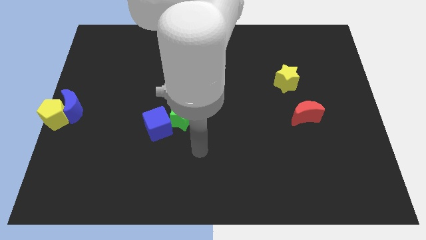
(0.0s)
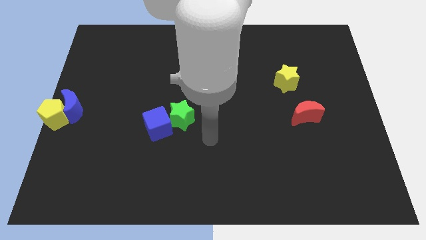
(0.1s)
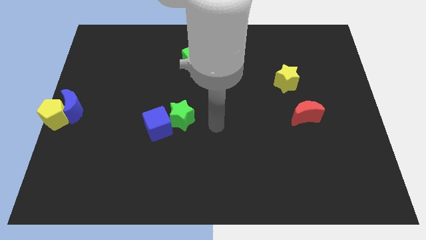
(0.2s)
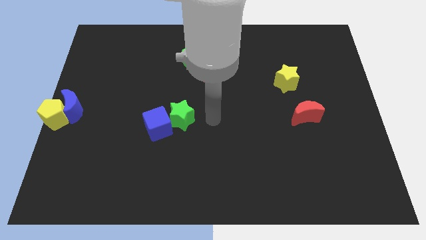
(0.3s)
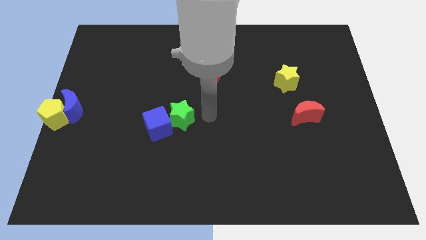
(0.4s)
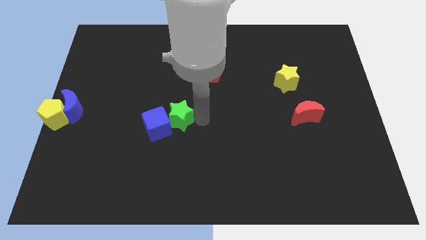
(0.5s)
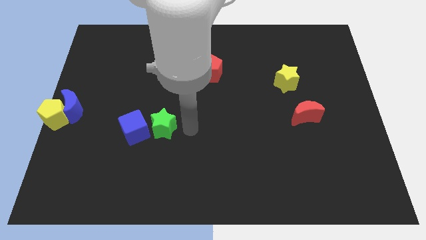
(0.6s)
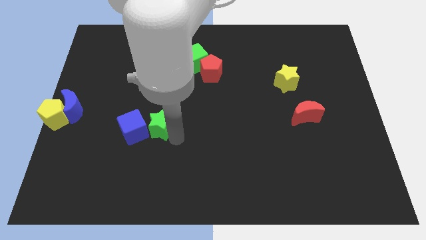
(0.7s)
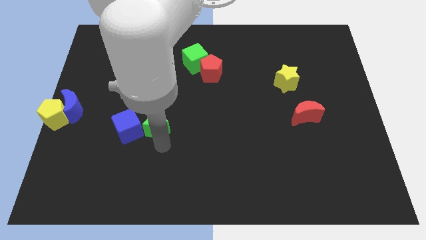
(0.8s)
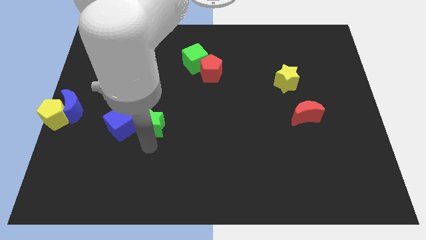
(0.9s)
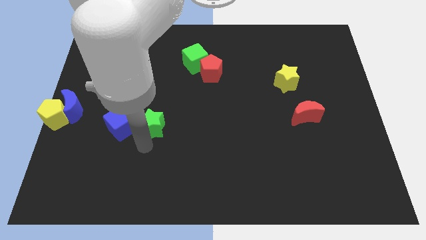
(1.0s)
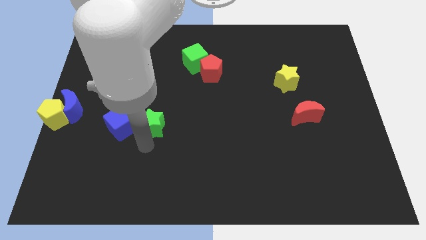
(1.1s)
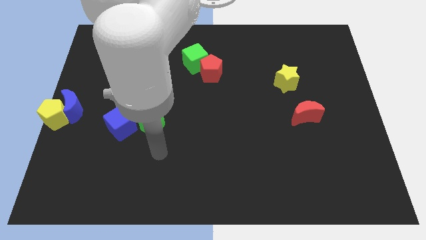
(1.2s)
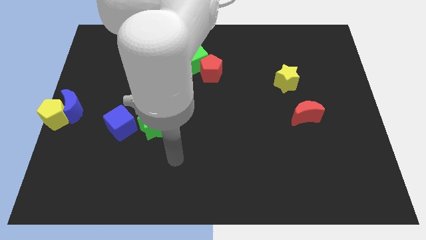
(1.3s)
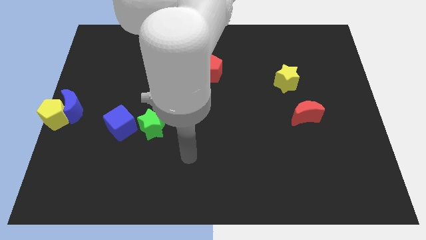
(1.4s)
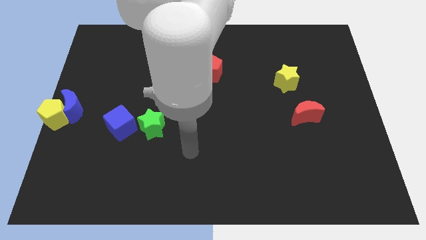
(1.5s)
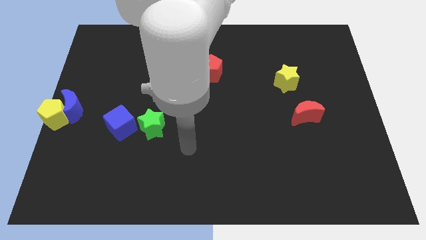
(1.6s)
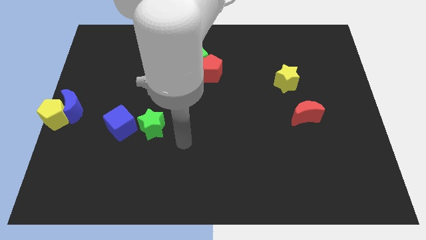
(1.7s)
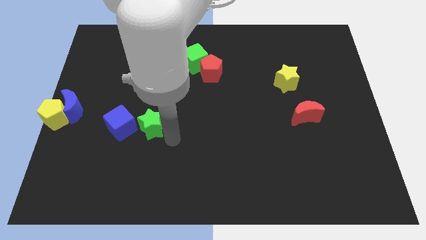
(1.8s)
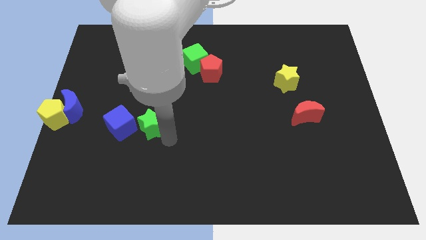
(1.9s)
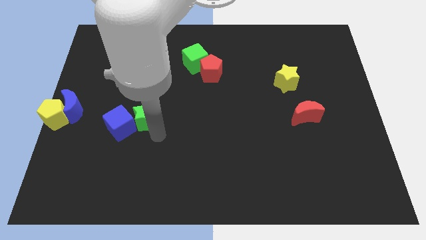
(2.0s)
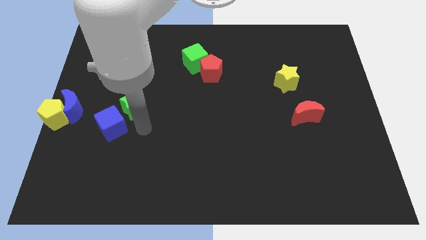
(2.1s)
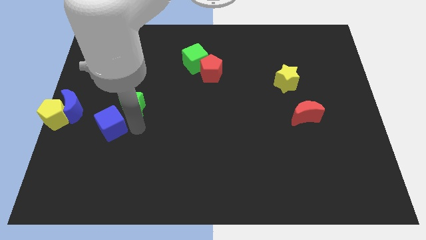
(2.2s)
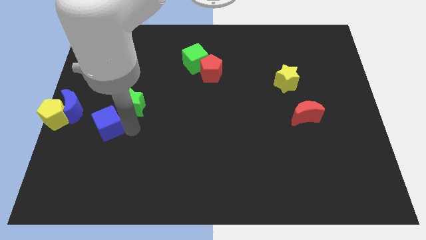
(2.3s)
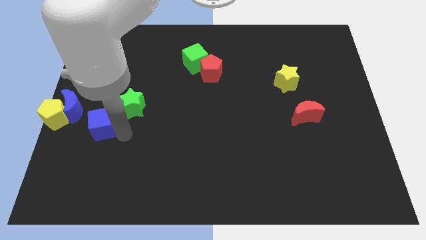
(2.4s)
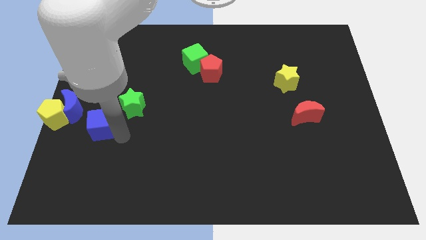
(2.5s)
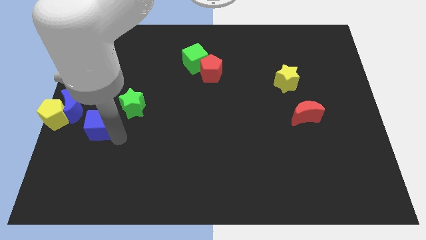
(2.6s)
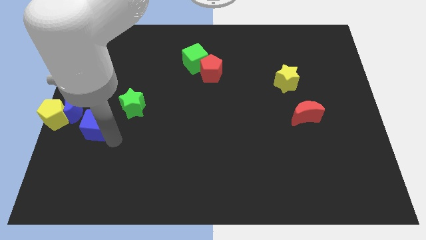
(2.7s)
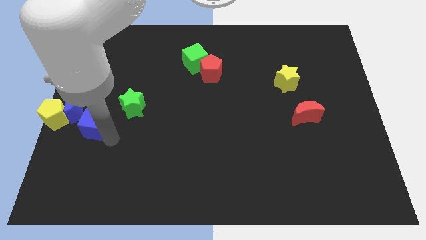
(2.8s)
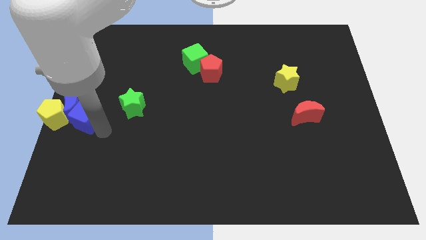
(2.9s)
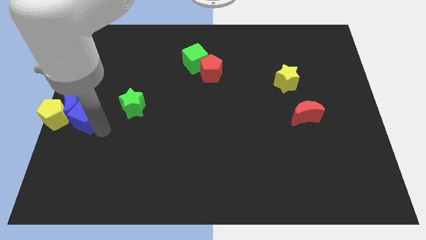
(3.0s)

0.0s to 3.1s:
push the blue cube with green star into the blue moon

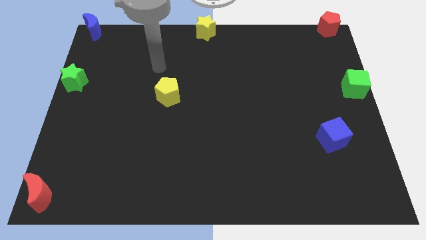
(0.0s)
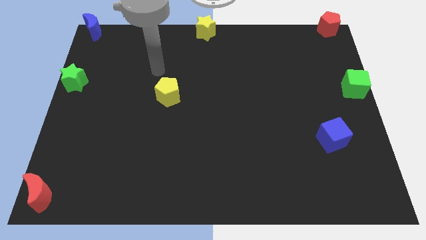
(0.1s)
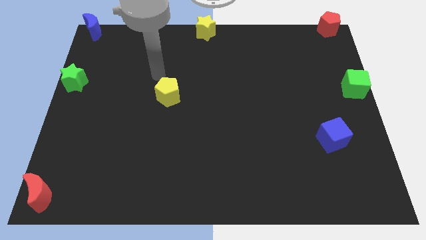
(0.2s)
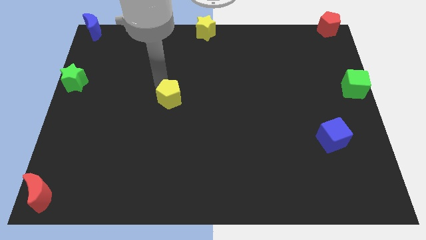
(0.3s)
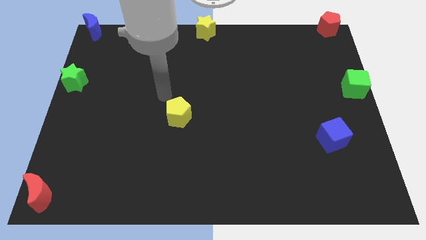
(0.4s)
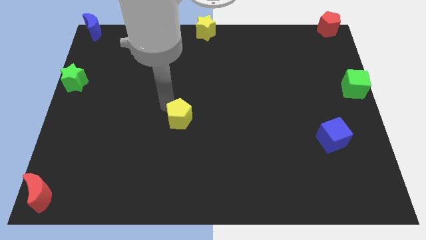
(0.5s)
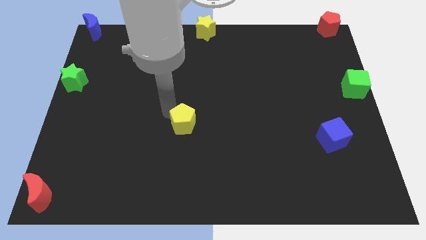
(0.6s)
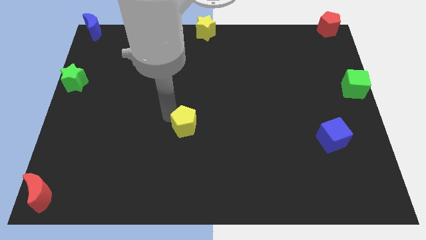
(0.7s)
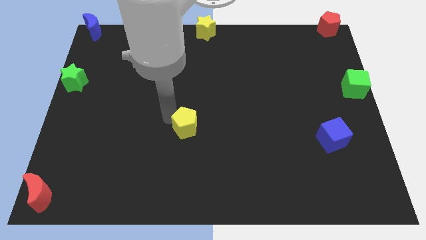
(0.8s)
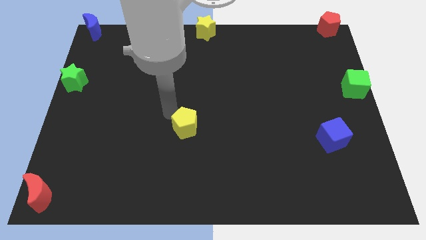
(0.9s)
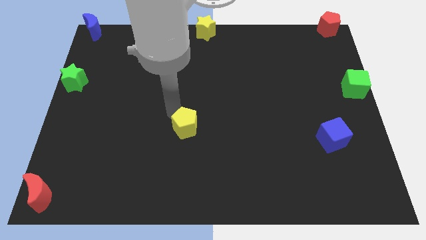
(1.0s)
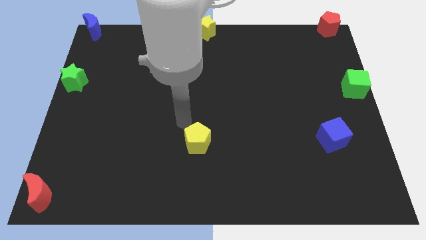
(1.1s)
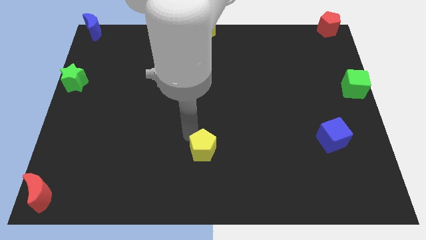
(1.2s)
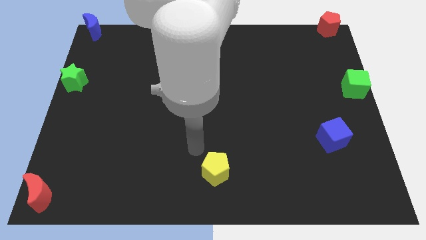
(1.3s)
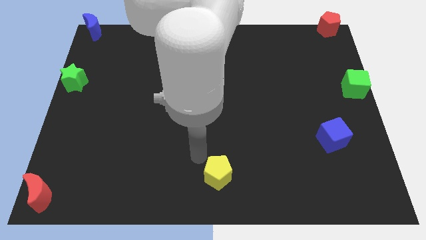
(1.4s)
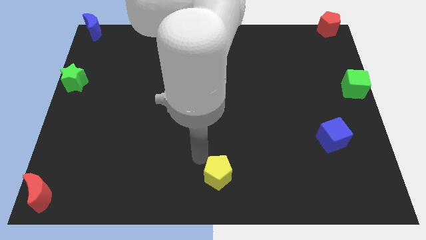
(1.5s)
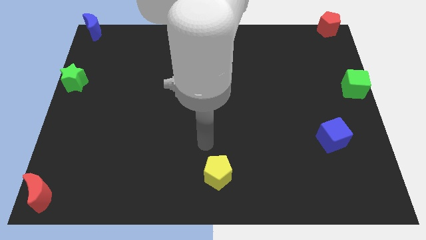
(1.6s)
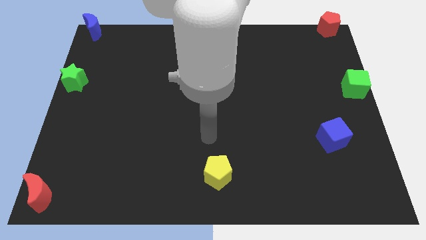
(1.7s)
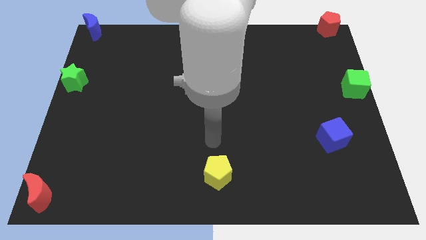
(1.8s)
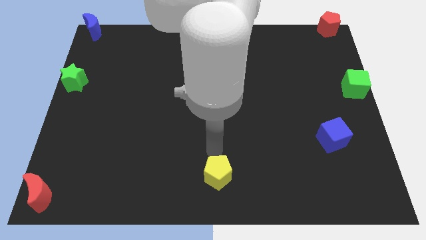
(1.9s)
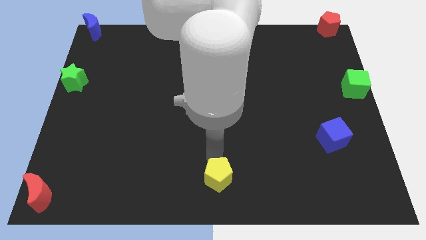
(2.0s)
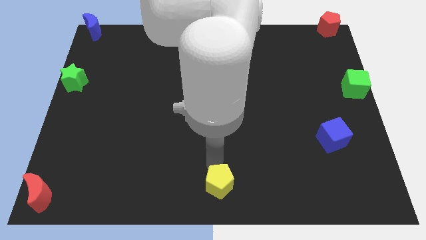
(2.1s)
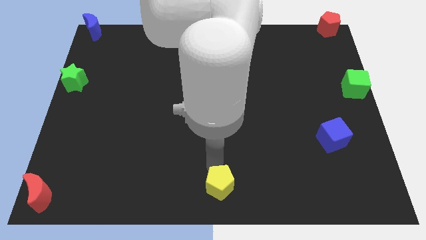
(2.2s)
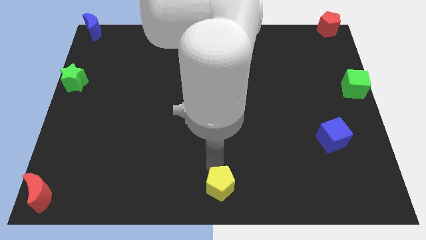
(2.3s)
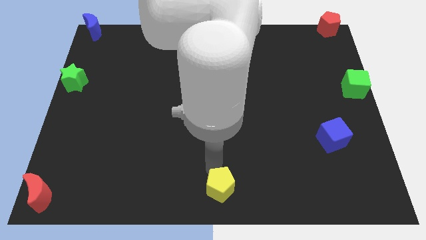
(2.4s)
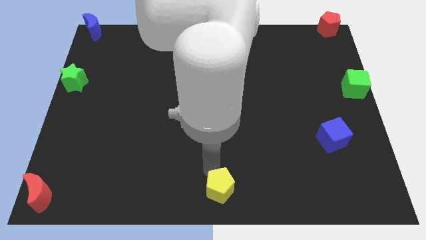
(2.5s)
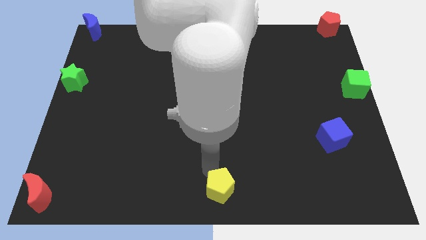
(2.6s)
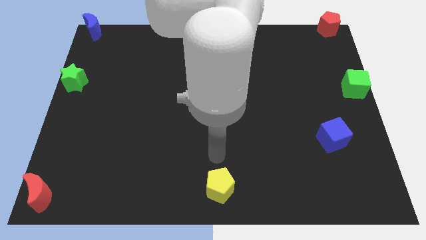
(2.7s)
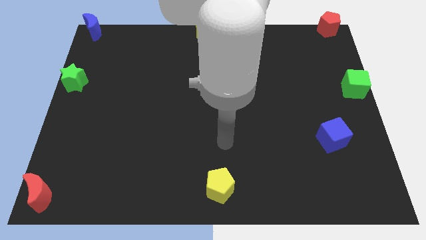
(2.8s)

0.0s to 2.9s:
place the yellow pentagon at the bottom center position

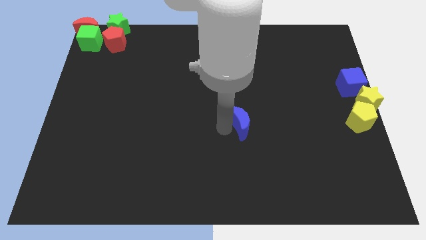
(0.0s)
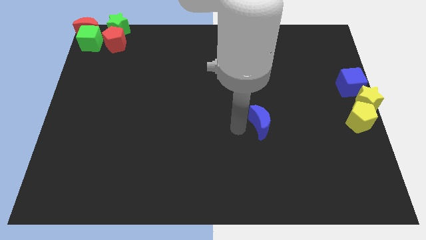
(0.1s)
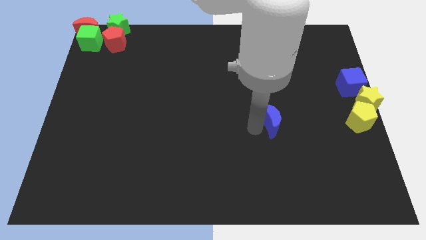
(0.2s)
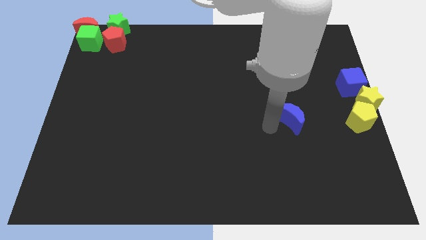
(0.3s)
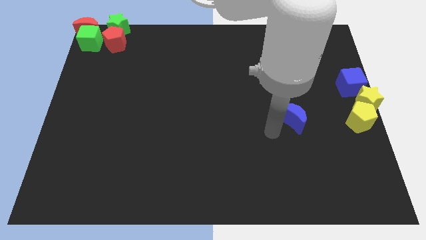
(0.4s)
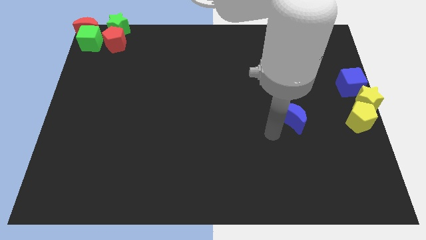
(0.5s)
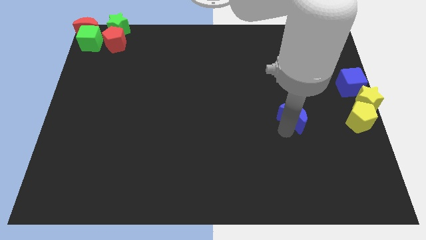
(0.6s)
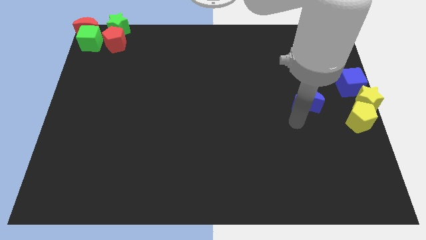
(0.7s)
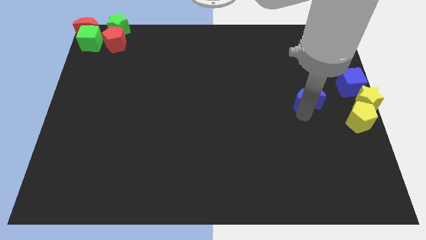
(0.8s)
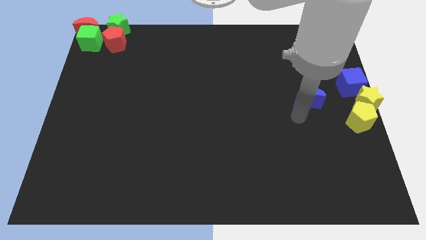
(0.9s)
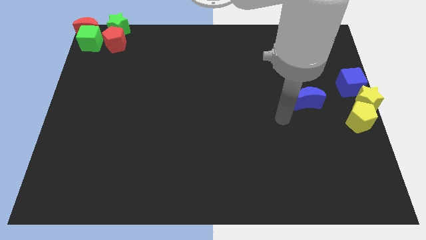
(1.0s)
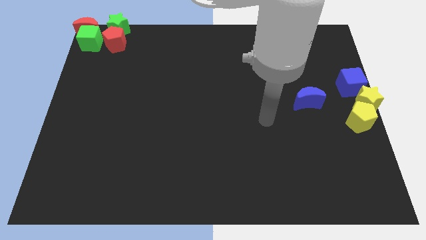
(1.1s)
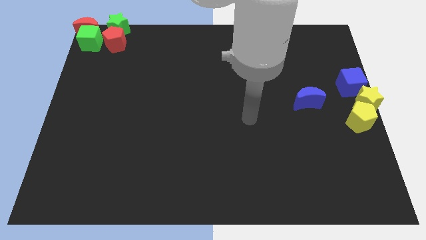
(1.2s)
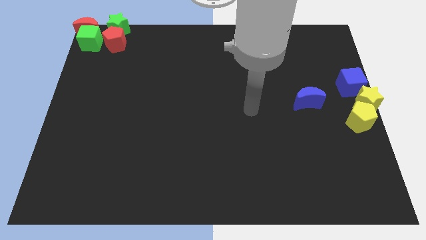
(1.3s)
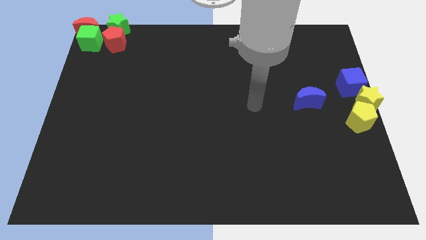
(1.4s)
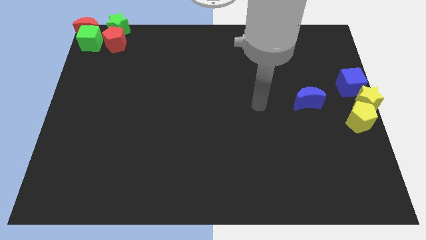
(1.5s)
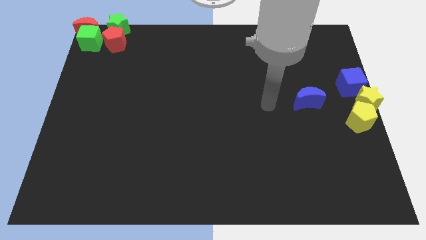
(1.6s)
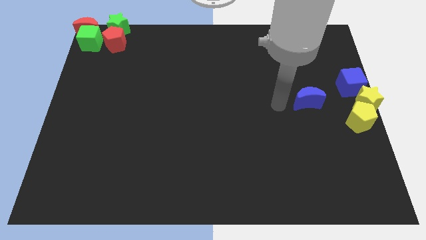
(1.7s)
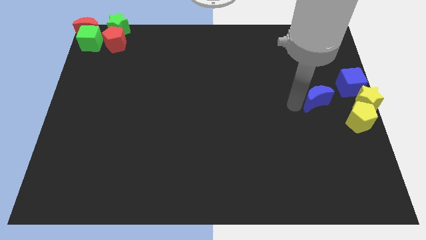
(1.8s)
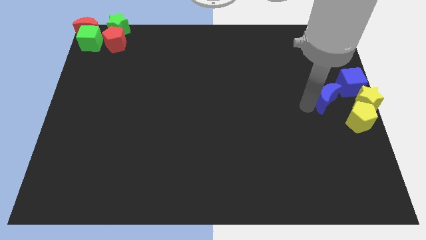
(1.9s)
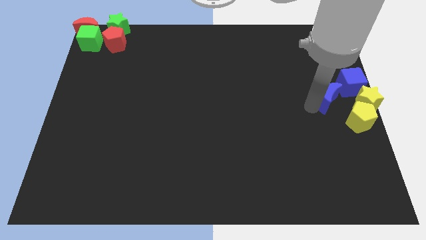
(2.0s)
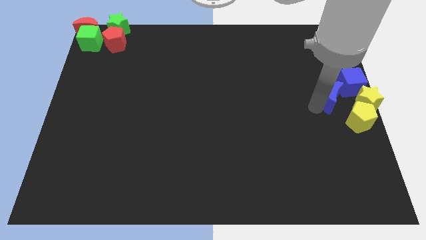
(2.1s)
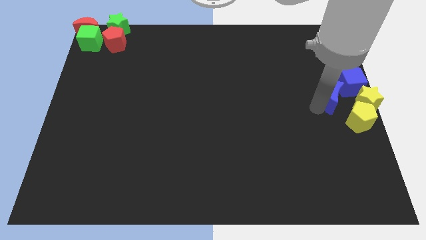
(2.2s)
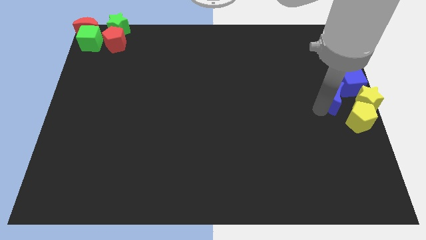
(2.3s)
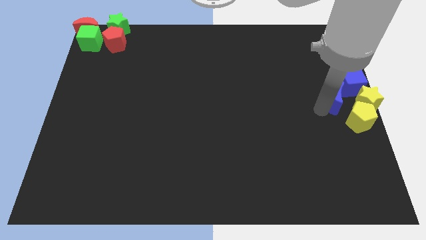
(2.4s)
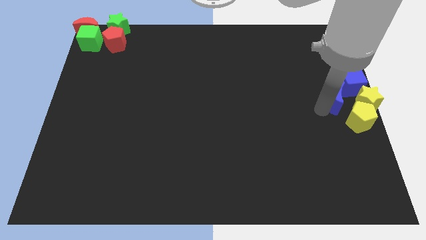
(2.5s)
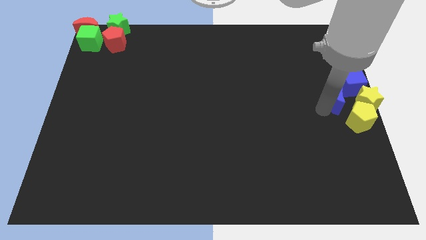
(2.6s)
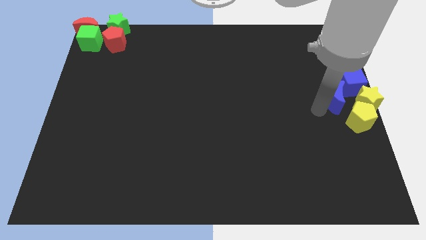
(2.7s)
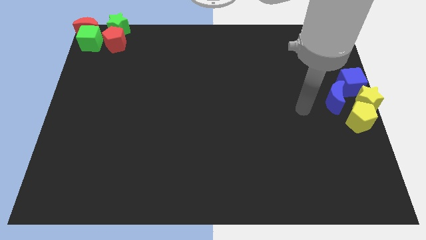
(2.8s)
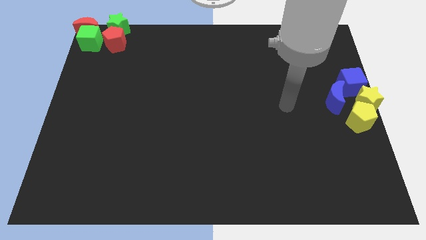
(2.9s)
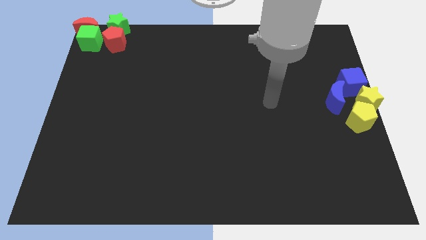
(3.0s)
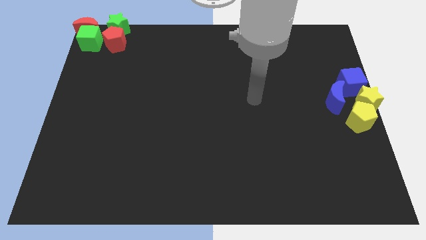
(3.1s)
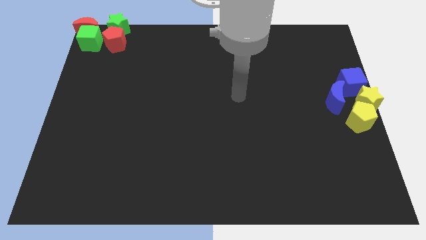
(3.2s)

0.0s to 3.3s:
push the blue moon to the group of yellow blocks
